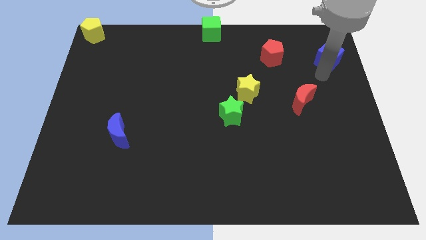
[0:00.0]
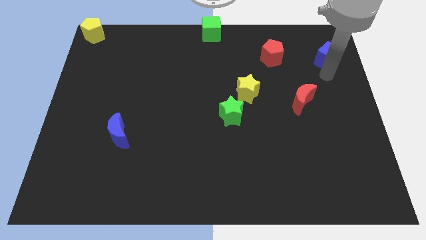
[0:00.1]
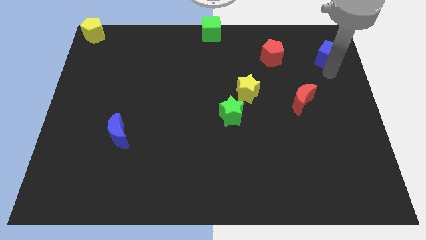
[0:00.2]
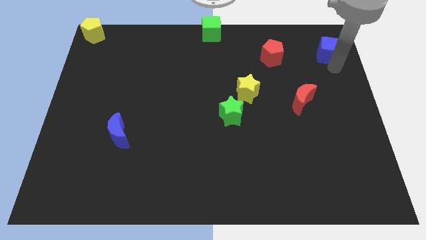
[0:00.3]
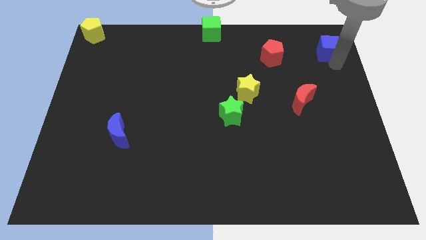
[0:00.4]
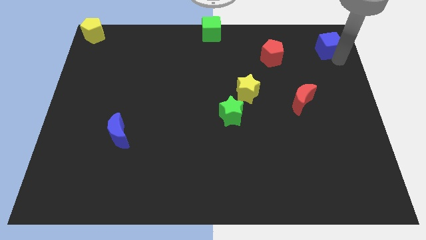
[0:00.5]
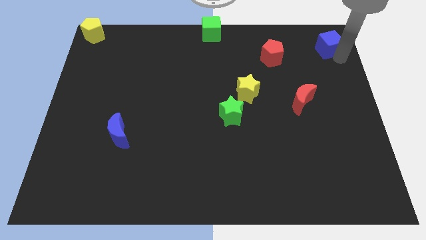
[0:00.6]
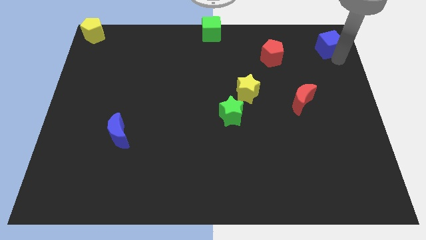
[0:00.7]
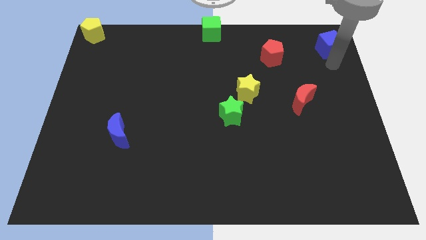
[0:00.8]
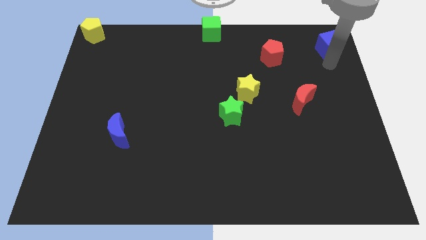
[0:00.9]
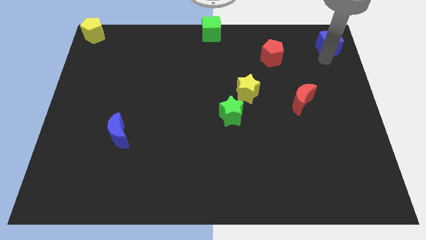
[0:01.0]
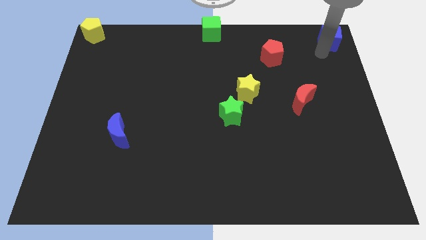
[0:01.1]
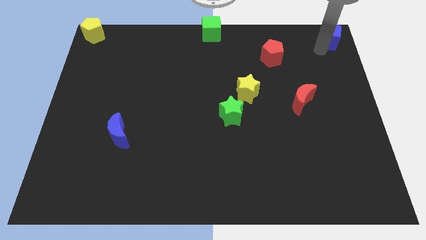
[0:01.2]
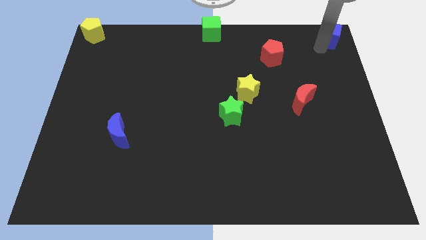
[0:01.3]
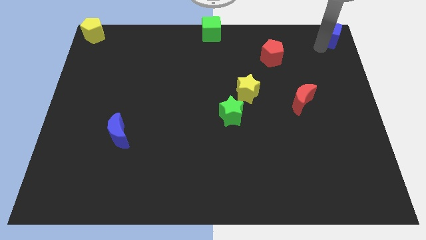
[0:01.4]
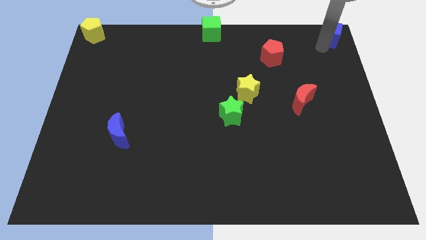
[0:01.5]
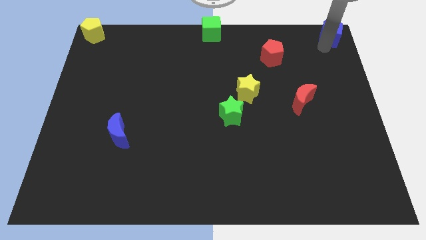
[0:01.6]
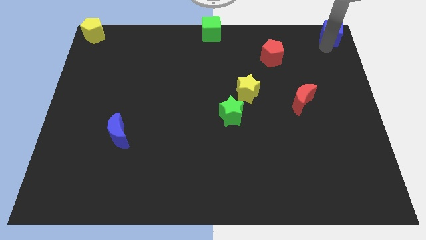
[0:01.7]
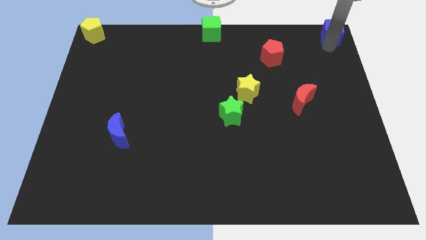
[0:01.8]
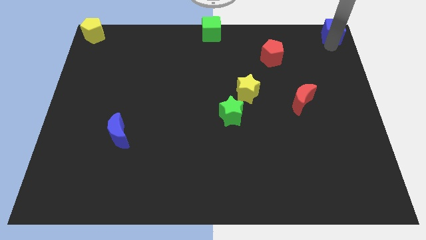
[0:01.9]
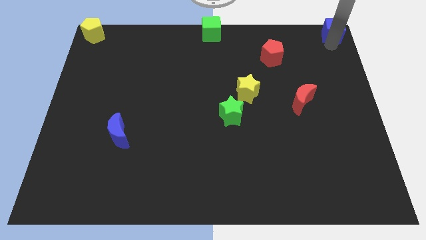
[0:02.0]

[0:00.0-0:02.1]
move blue cube to the top right

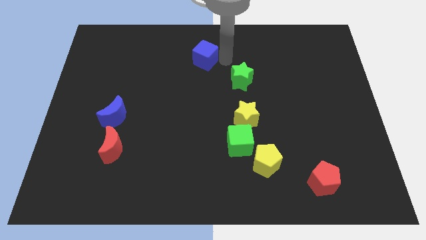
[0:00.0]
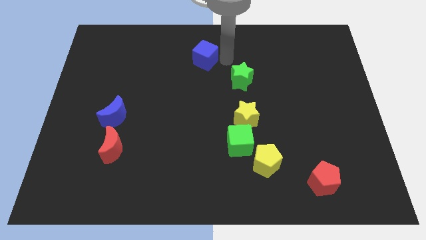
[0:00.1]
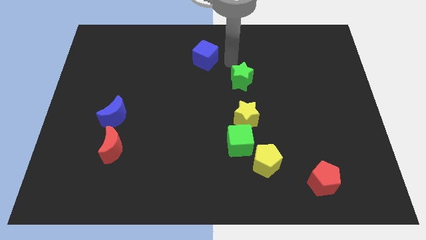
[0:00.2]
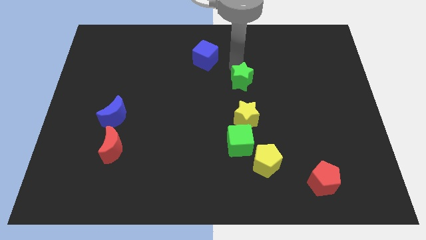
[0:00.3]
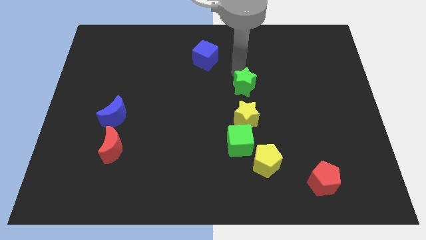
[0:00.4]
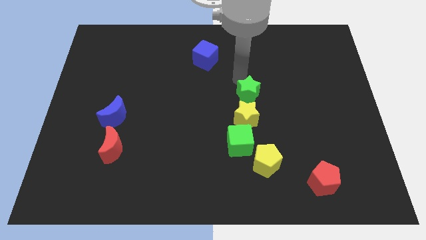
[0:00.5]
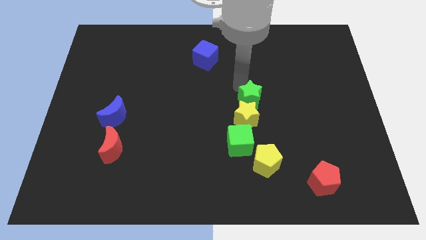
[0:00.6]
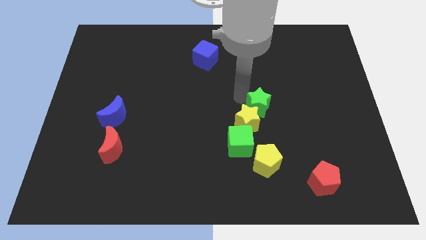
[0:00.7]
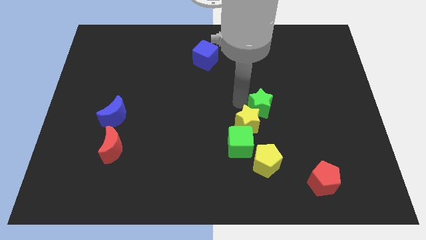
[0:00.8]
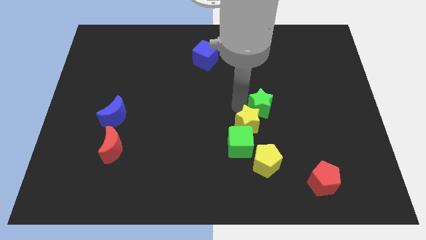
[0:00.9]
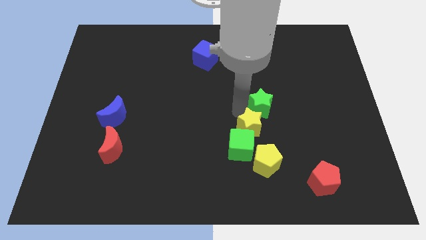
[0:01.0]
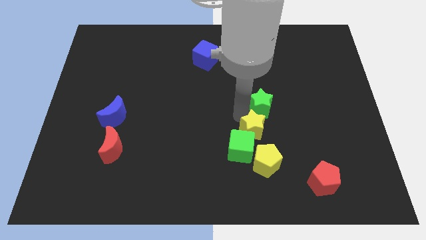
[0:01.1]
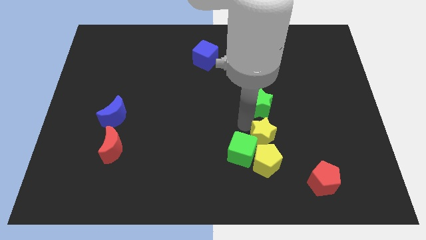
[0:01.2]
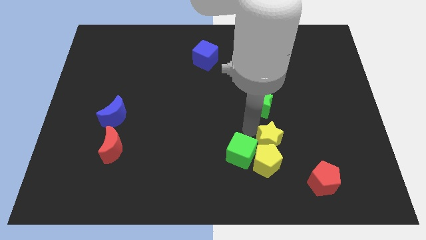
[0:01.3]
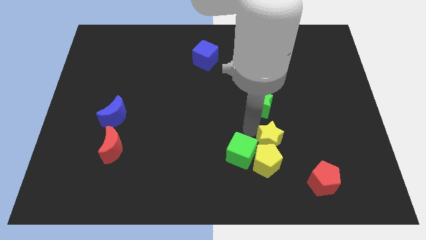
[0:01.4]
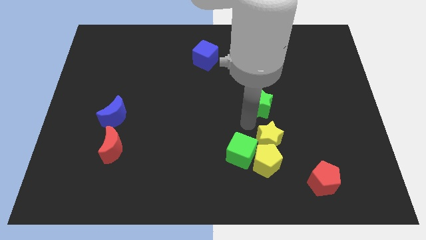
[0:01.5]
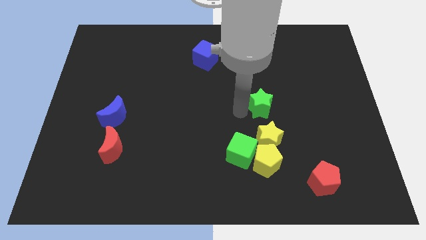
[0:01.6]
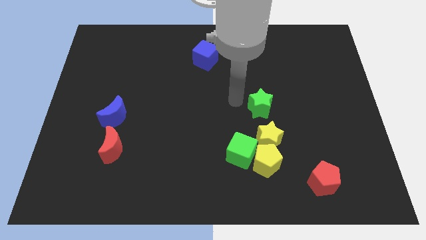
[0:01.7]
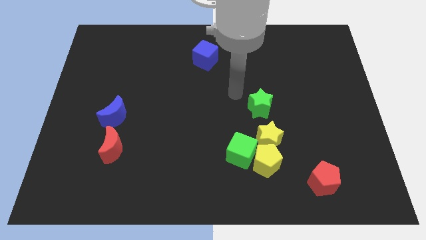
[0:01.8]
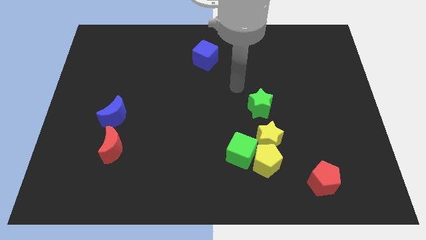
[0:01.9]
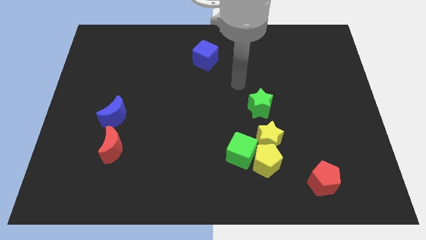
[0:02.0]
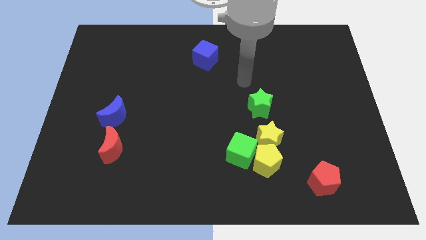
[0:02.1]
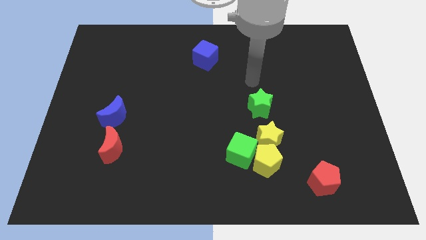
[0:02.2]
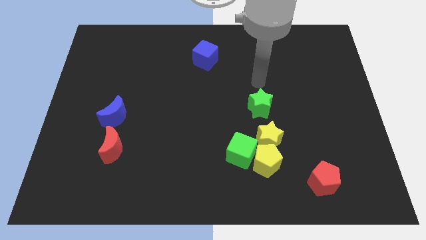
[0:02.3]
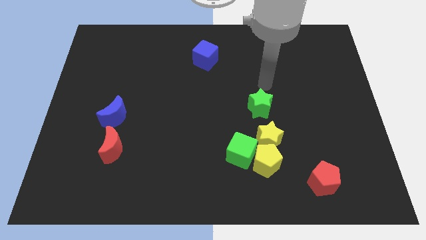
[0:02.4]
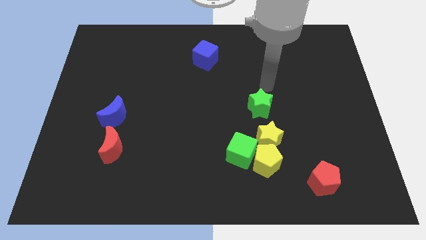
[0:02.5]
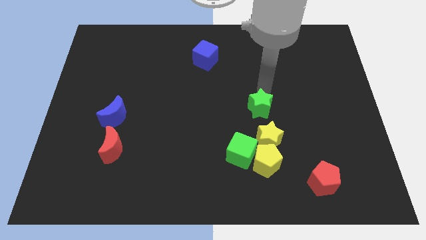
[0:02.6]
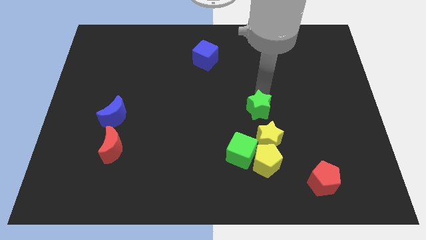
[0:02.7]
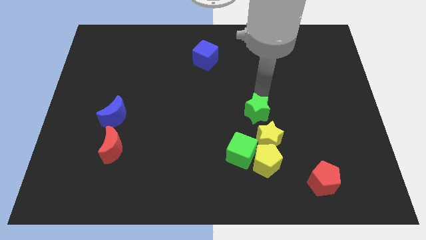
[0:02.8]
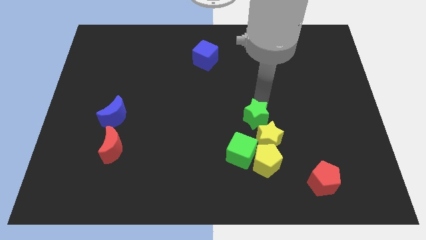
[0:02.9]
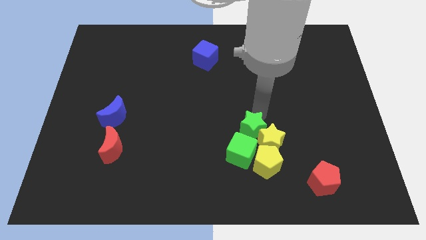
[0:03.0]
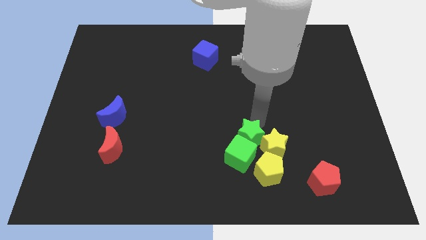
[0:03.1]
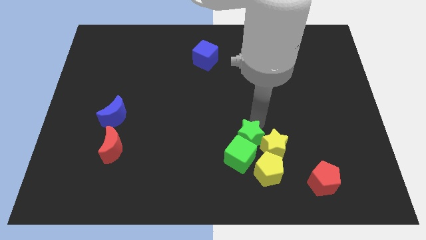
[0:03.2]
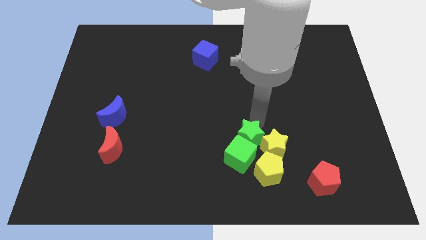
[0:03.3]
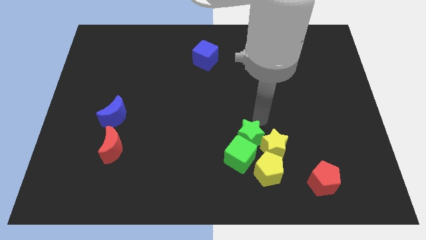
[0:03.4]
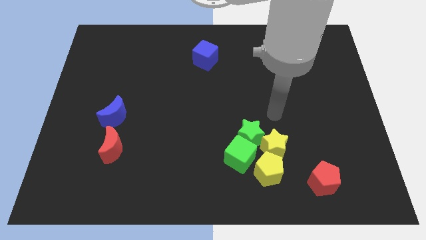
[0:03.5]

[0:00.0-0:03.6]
put the green star and yellow star to the top right of the green cube and yellow pentagon

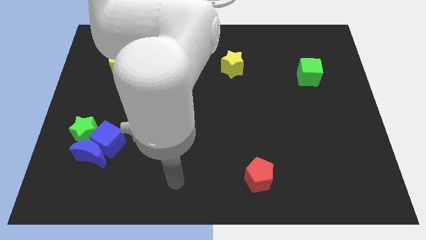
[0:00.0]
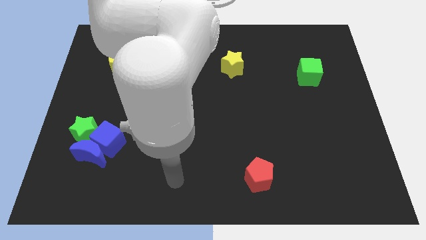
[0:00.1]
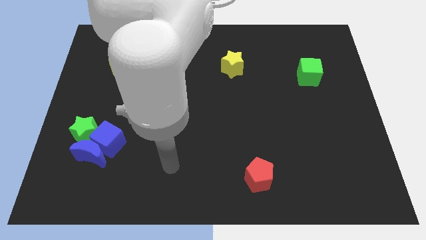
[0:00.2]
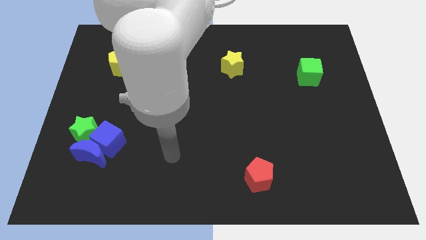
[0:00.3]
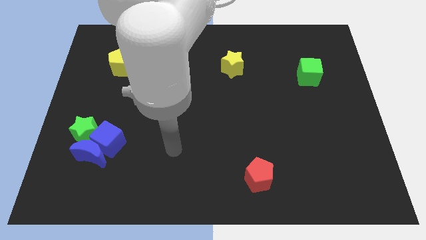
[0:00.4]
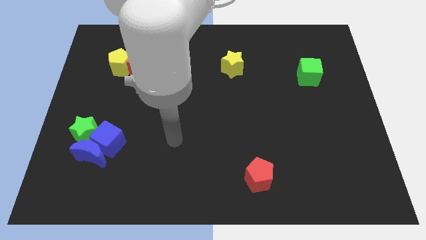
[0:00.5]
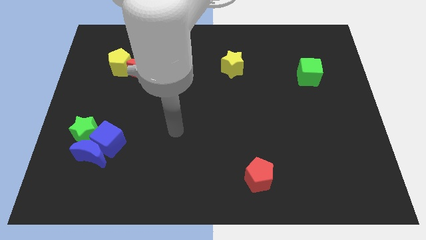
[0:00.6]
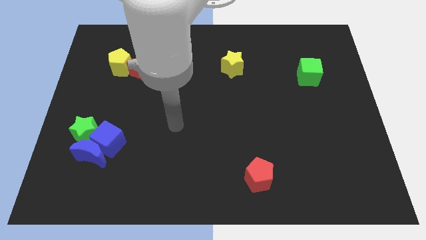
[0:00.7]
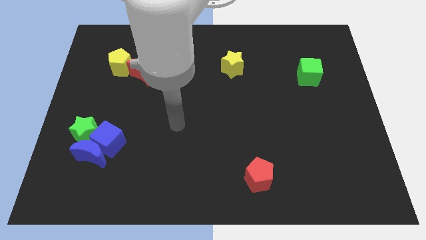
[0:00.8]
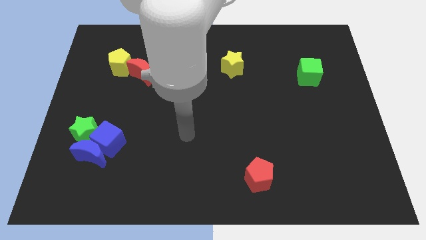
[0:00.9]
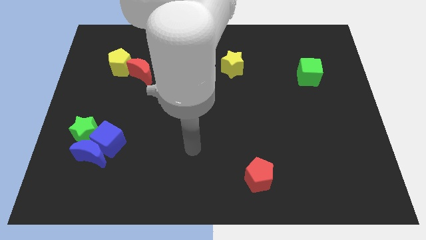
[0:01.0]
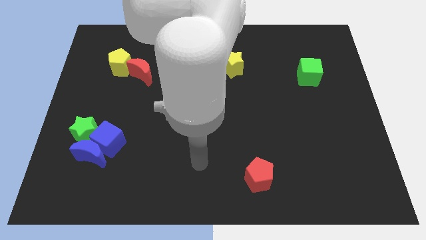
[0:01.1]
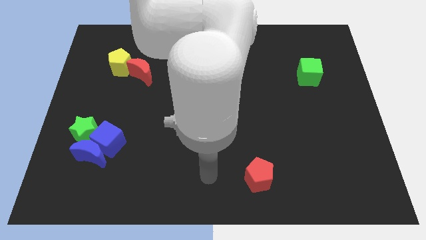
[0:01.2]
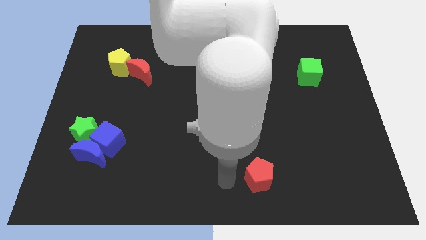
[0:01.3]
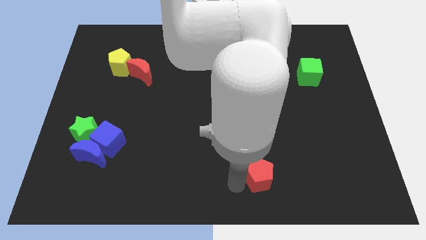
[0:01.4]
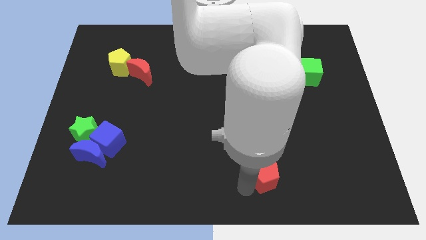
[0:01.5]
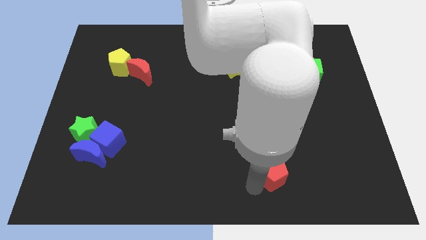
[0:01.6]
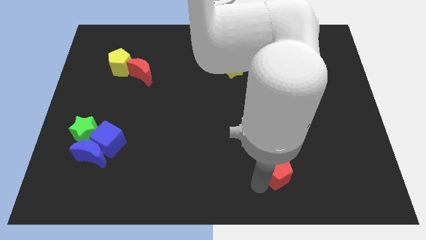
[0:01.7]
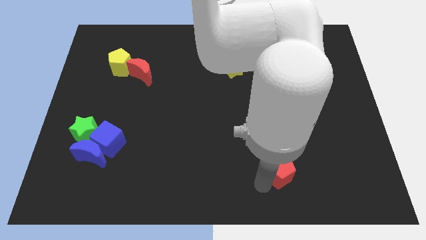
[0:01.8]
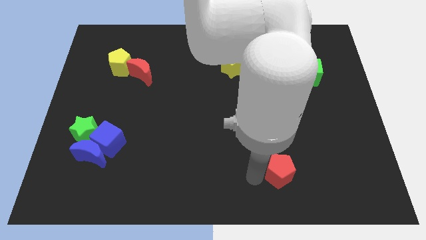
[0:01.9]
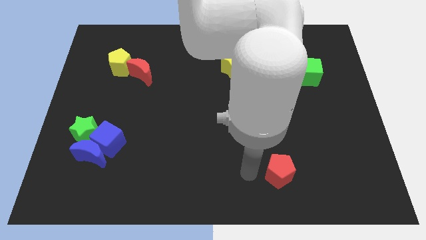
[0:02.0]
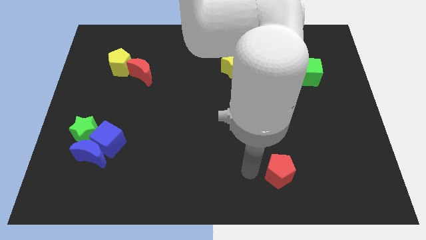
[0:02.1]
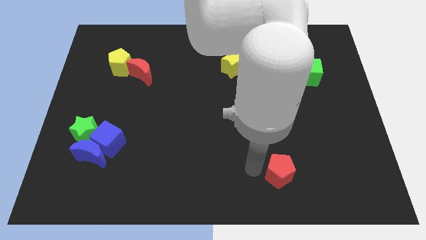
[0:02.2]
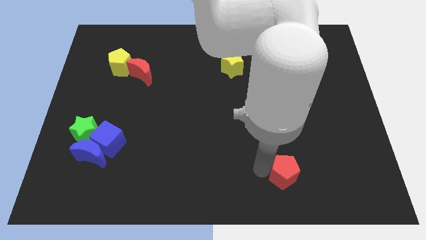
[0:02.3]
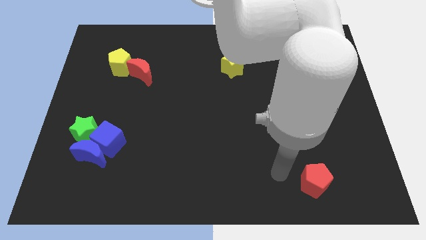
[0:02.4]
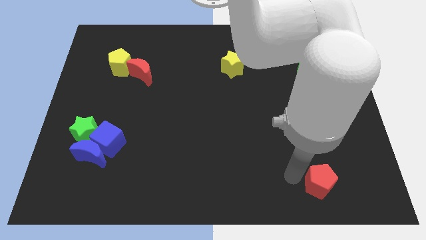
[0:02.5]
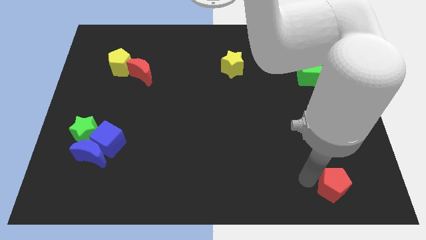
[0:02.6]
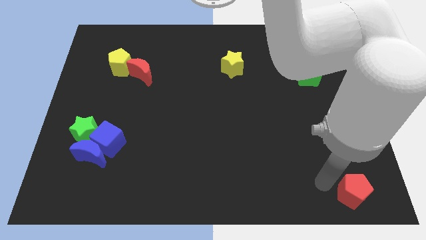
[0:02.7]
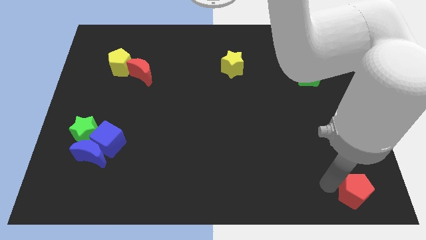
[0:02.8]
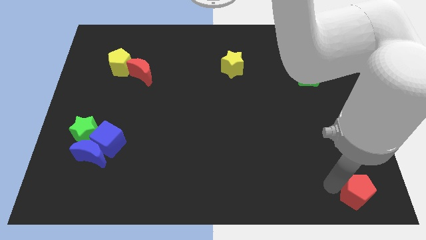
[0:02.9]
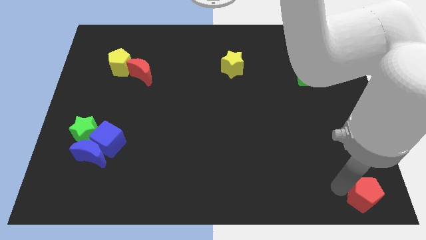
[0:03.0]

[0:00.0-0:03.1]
slide the red pentagon towards the bottom right of the board
